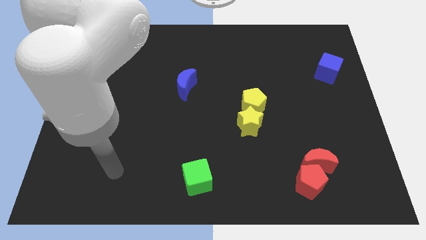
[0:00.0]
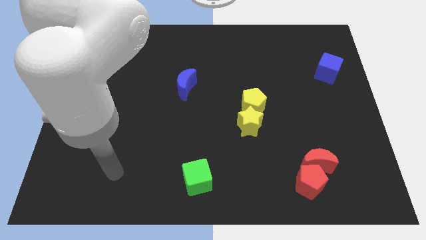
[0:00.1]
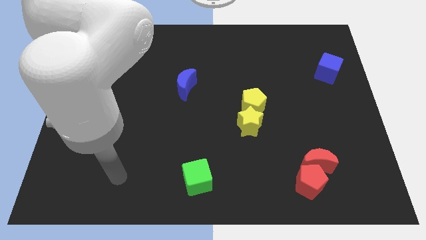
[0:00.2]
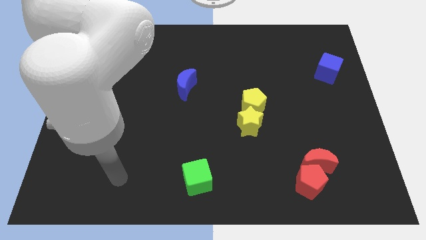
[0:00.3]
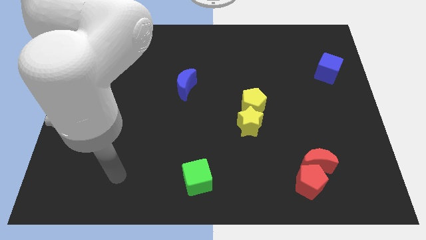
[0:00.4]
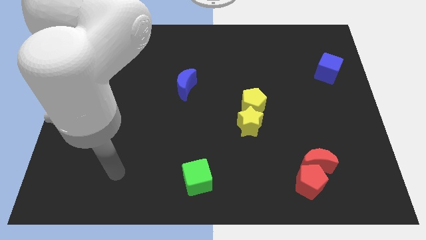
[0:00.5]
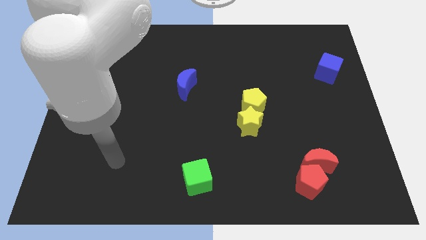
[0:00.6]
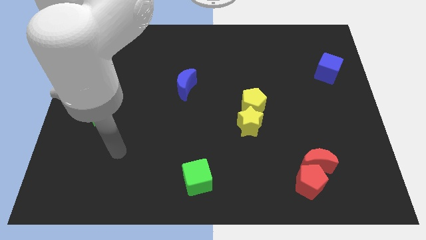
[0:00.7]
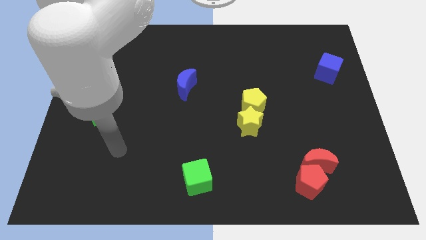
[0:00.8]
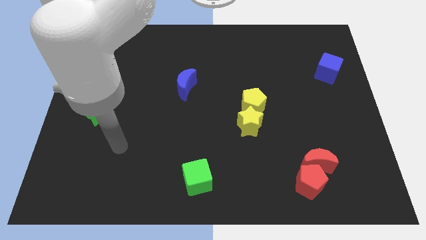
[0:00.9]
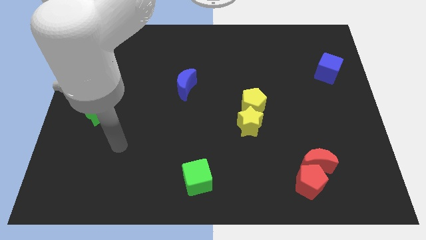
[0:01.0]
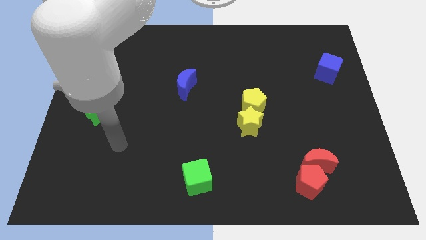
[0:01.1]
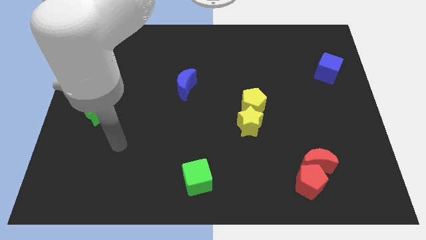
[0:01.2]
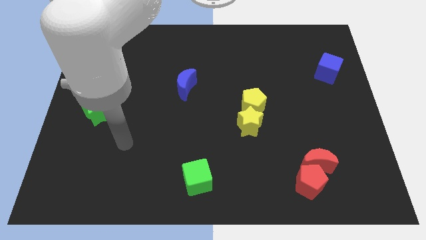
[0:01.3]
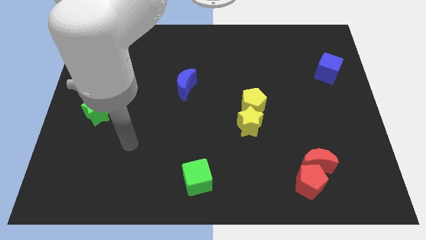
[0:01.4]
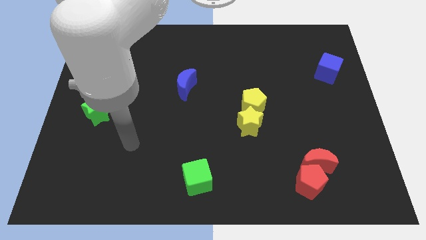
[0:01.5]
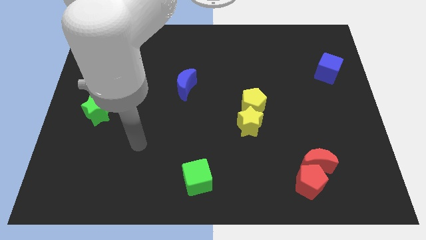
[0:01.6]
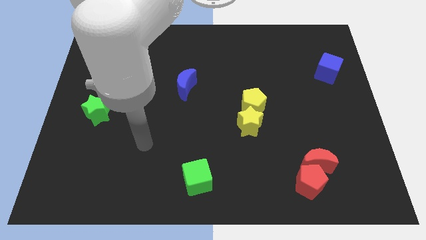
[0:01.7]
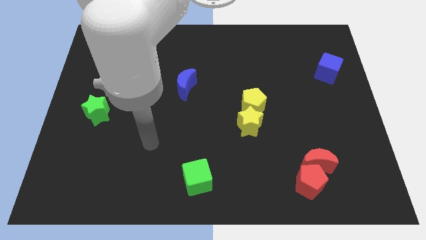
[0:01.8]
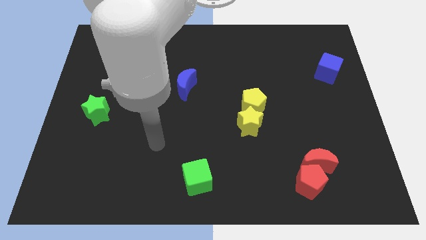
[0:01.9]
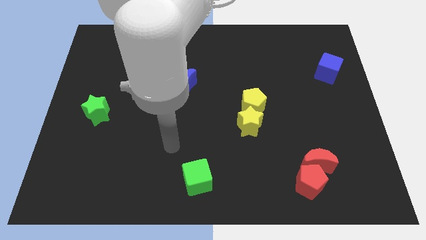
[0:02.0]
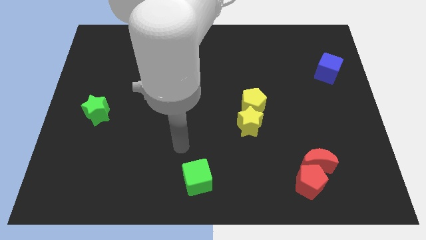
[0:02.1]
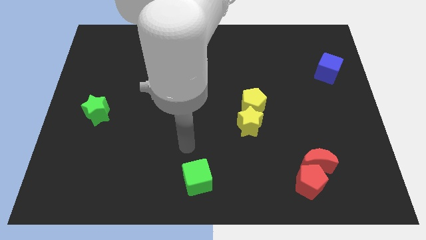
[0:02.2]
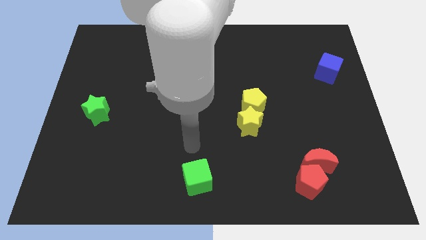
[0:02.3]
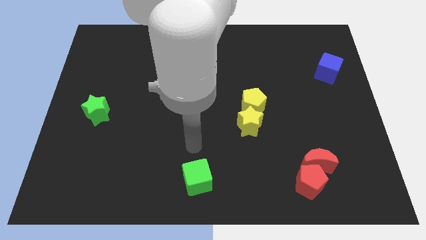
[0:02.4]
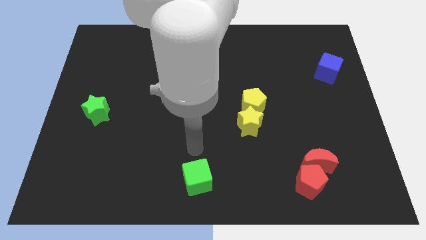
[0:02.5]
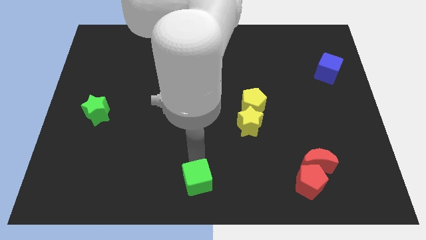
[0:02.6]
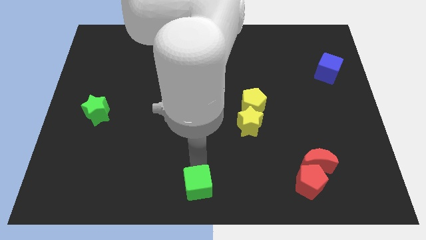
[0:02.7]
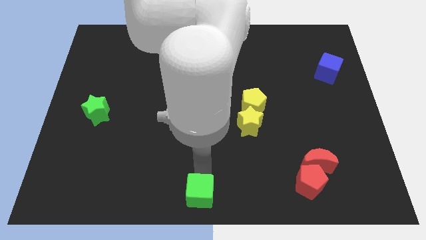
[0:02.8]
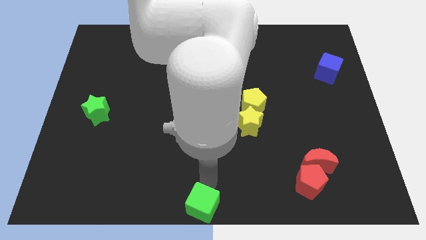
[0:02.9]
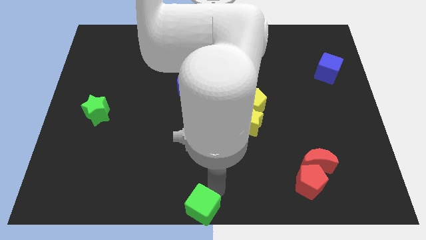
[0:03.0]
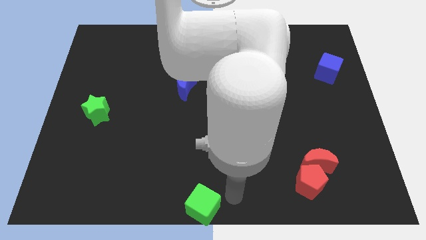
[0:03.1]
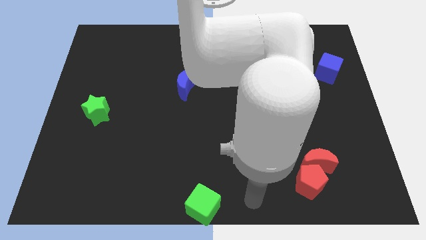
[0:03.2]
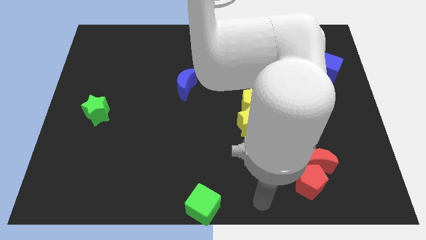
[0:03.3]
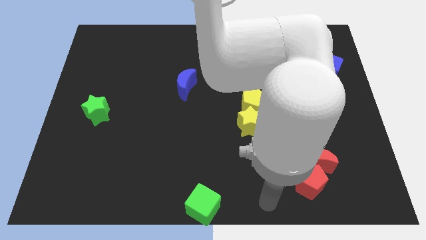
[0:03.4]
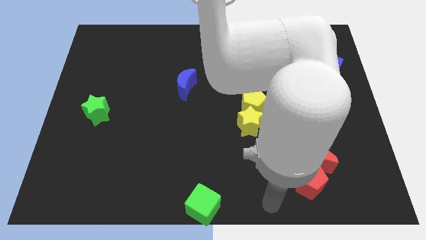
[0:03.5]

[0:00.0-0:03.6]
push the green cube to the bottom center of the board

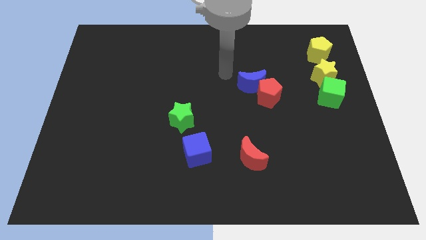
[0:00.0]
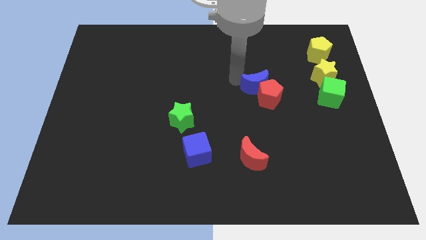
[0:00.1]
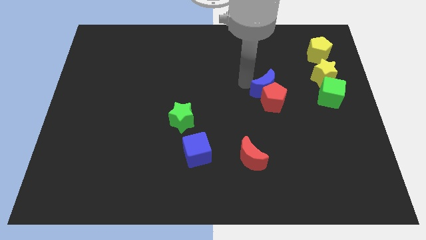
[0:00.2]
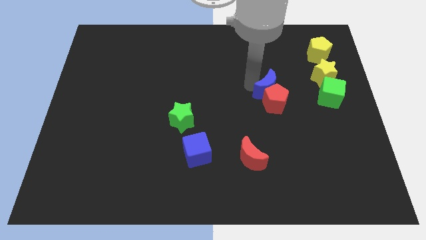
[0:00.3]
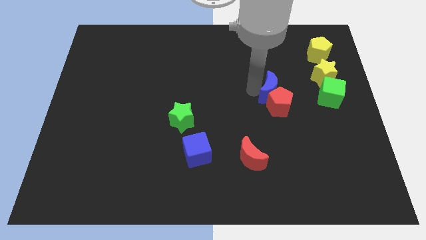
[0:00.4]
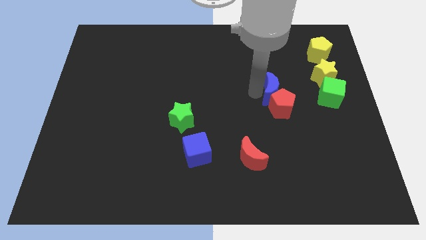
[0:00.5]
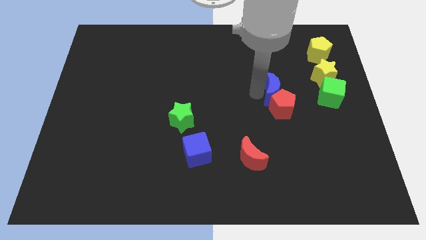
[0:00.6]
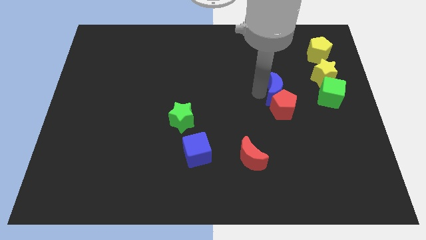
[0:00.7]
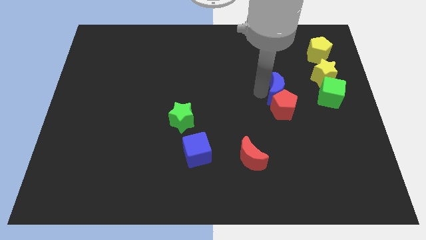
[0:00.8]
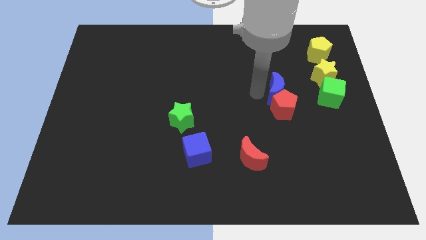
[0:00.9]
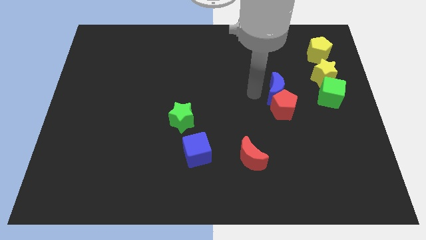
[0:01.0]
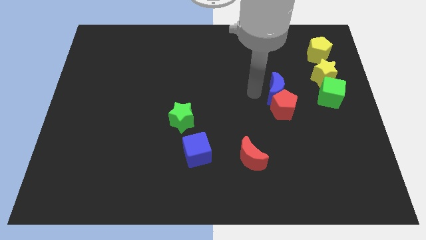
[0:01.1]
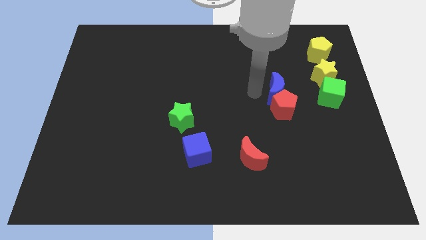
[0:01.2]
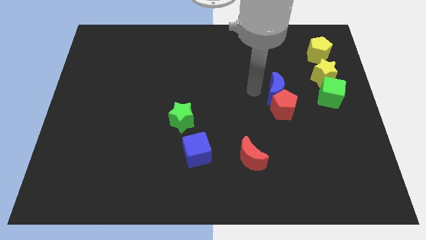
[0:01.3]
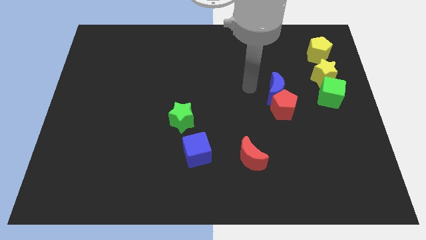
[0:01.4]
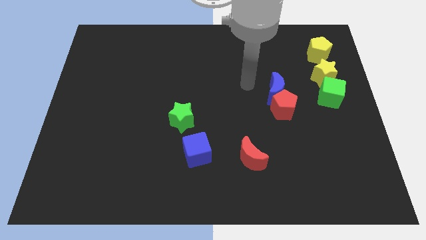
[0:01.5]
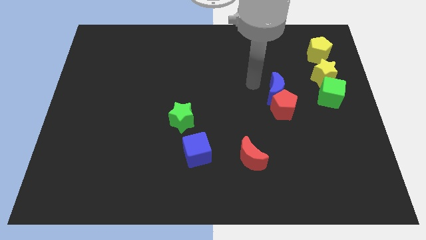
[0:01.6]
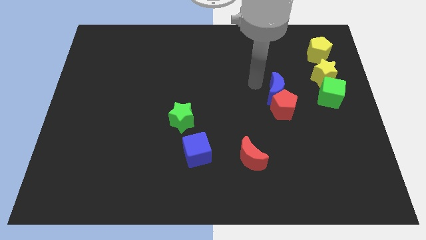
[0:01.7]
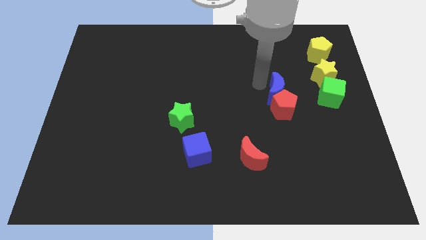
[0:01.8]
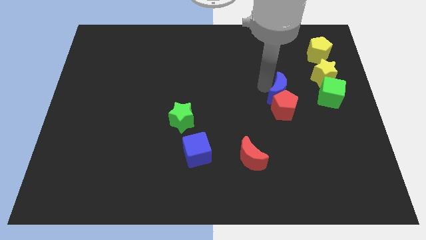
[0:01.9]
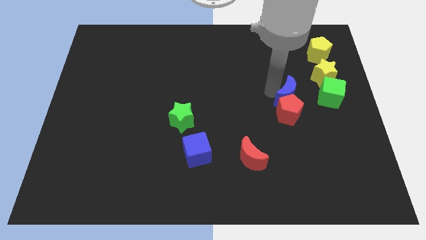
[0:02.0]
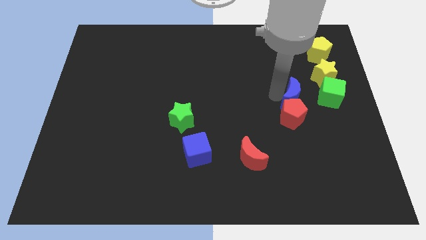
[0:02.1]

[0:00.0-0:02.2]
push the blue moon into the red pentagon

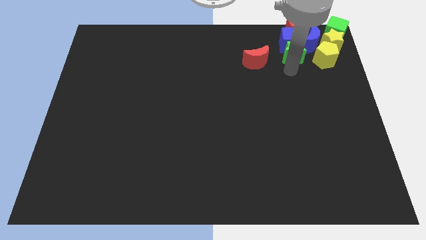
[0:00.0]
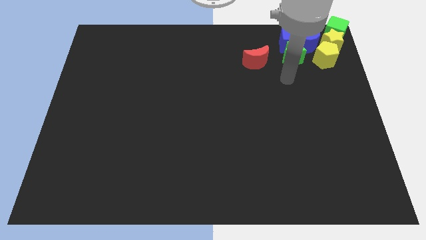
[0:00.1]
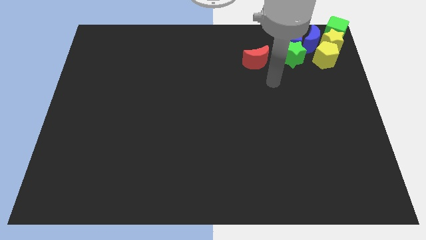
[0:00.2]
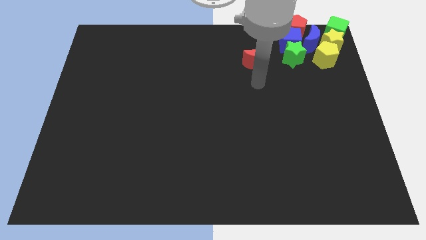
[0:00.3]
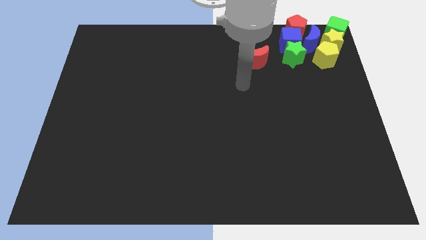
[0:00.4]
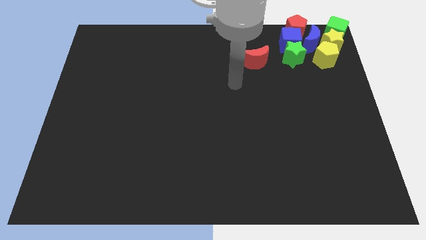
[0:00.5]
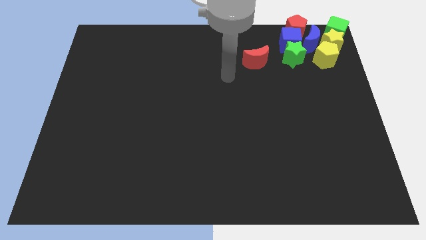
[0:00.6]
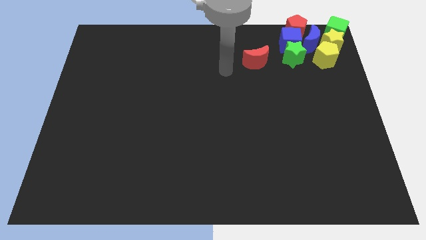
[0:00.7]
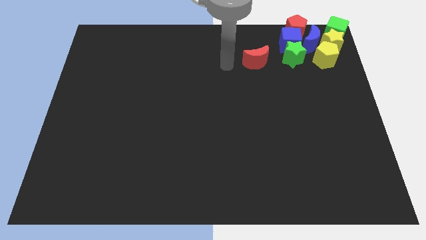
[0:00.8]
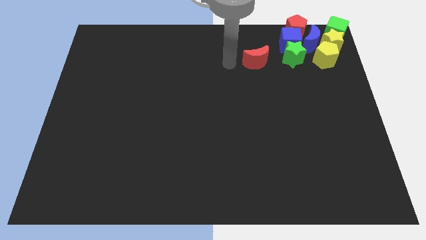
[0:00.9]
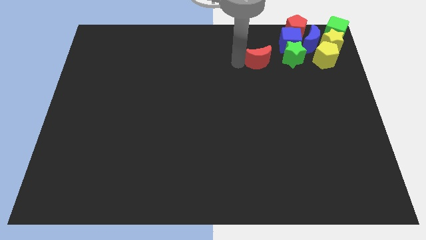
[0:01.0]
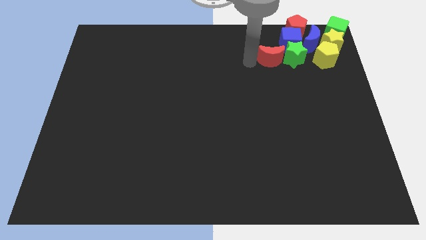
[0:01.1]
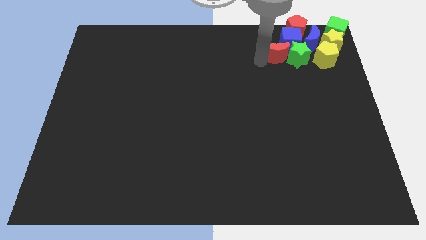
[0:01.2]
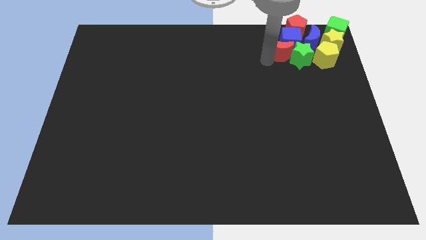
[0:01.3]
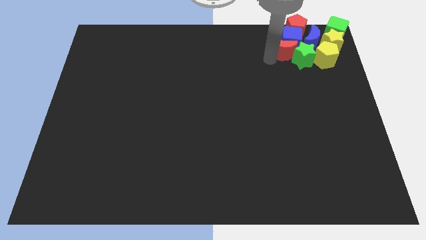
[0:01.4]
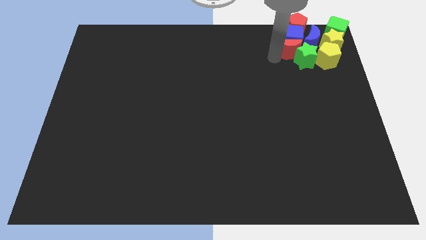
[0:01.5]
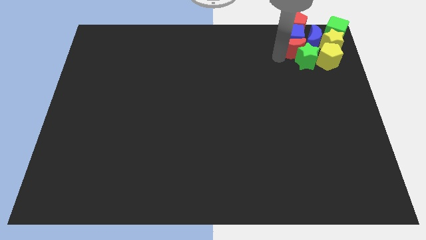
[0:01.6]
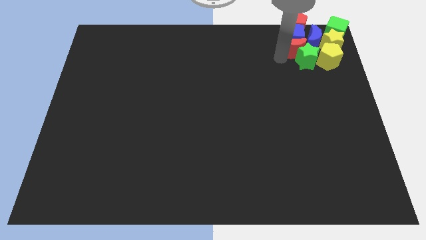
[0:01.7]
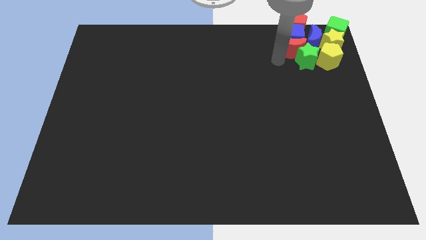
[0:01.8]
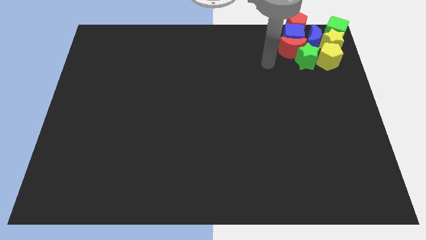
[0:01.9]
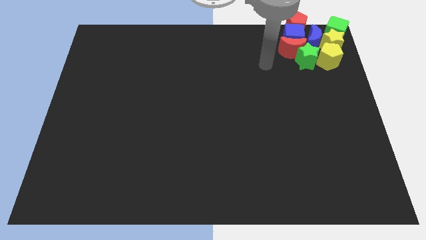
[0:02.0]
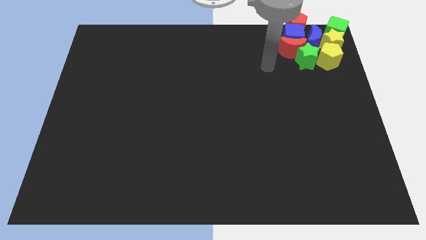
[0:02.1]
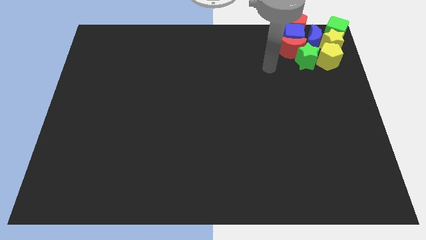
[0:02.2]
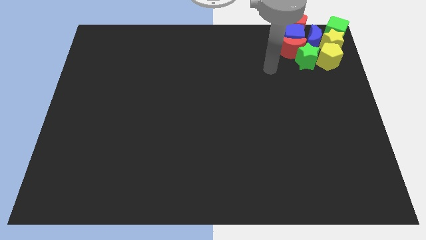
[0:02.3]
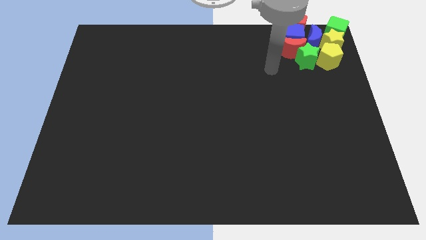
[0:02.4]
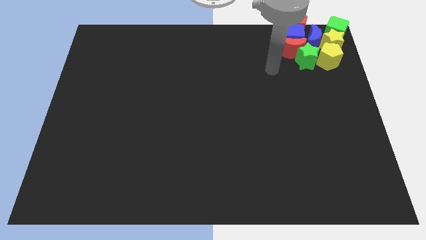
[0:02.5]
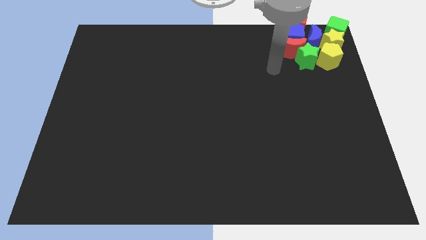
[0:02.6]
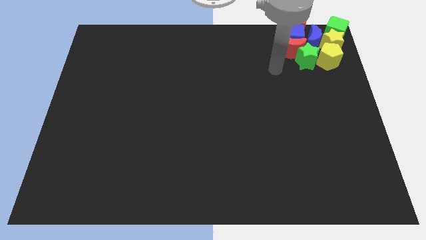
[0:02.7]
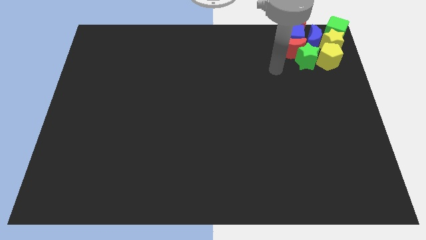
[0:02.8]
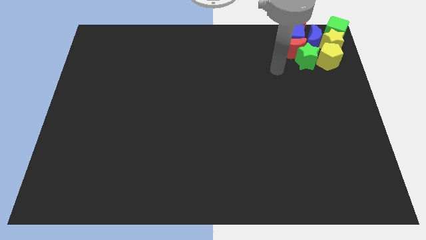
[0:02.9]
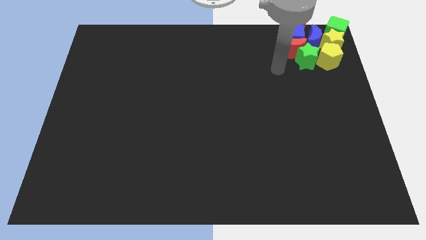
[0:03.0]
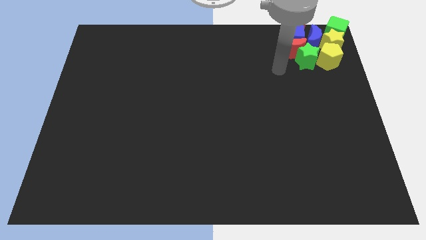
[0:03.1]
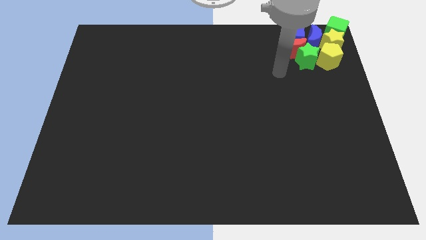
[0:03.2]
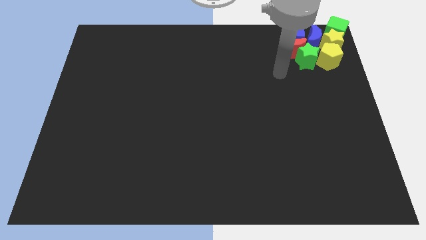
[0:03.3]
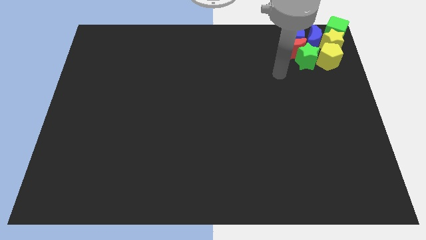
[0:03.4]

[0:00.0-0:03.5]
push the red moon into the bottom of blue cube
